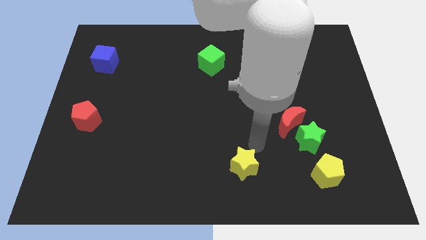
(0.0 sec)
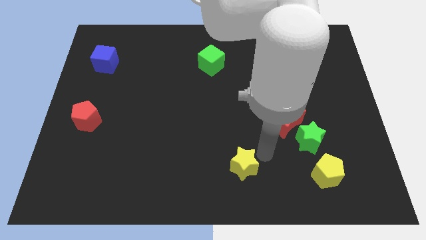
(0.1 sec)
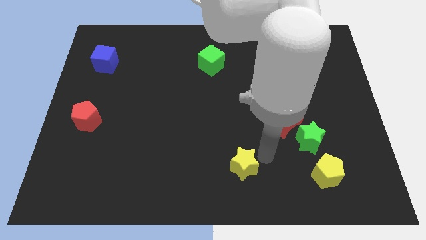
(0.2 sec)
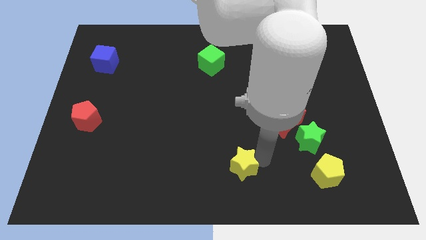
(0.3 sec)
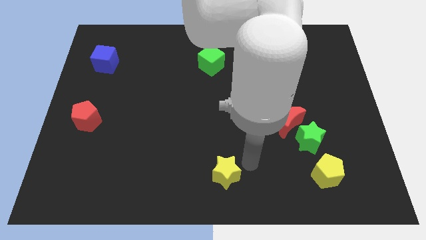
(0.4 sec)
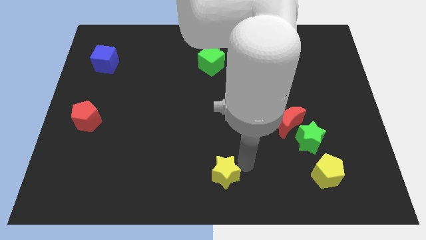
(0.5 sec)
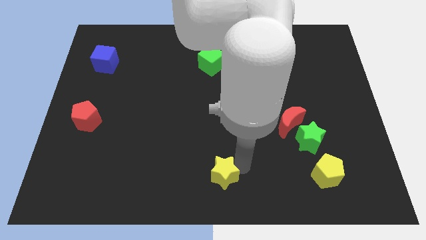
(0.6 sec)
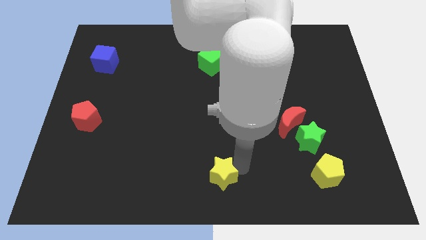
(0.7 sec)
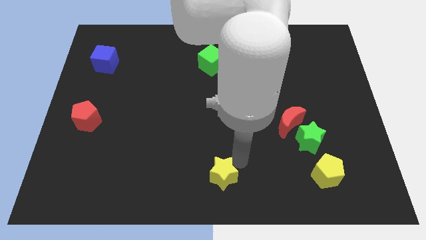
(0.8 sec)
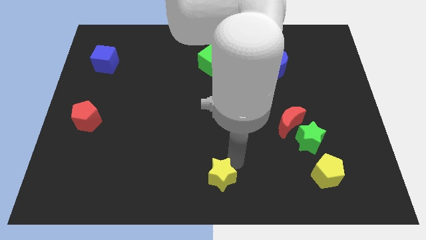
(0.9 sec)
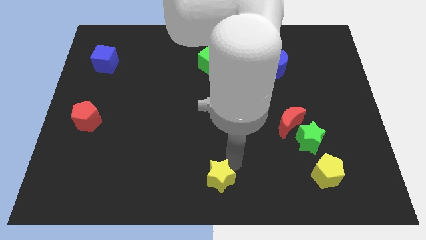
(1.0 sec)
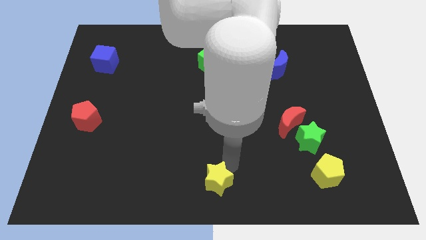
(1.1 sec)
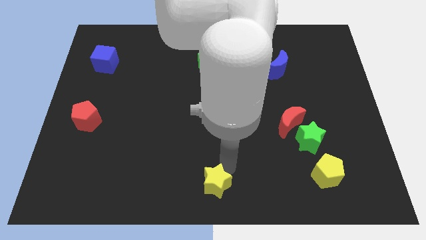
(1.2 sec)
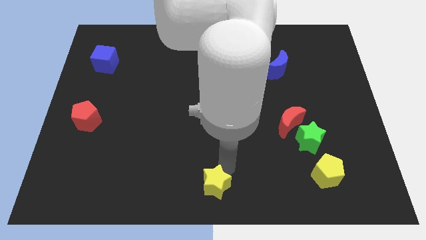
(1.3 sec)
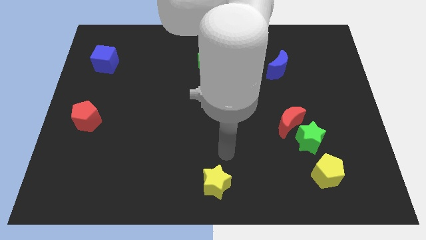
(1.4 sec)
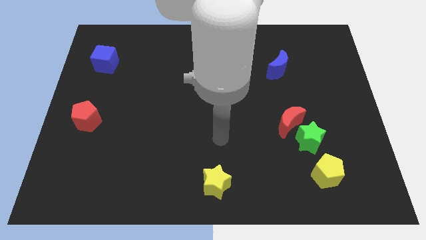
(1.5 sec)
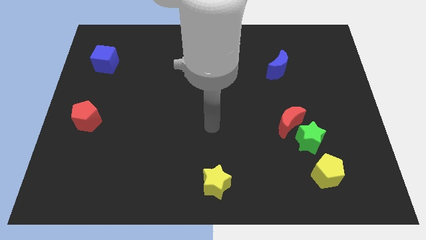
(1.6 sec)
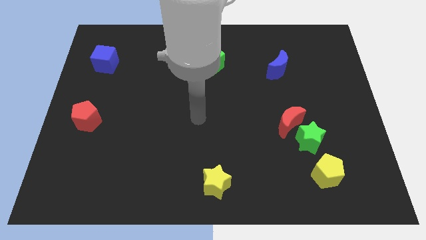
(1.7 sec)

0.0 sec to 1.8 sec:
push the yellow star slightly towards the bottom center of the board

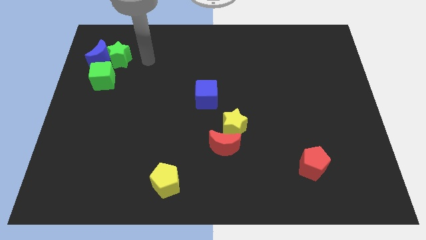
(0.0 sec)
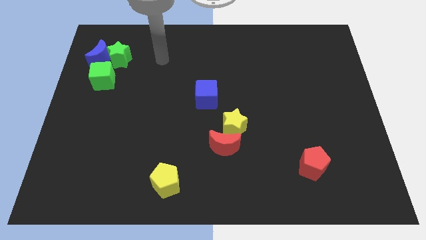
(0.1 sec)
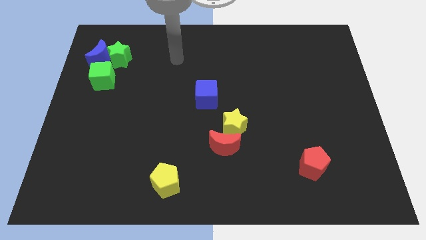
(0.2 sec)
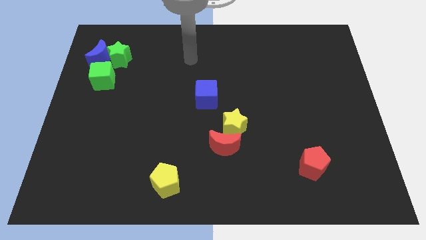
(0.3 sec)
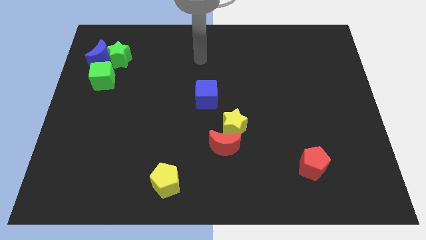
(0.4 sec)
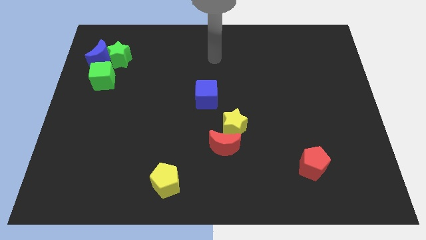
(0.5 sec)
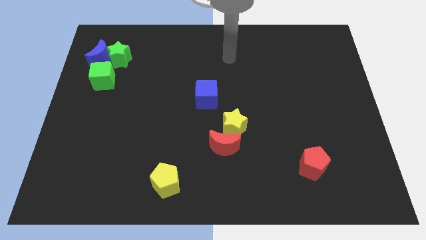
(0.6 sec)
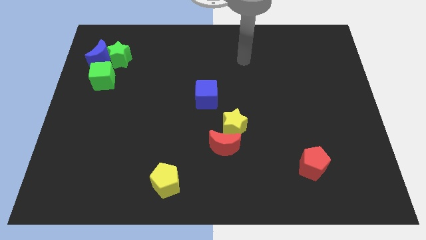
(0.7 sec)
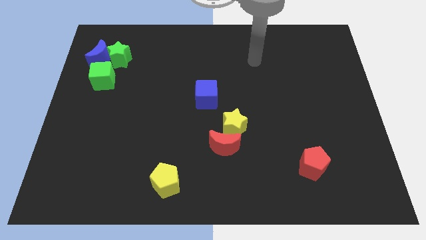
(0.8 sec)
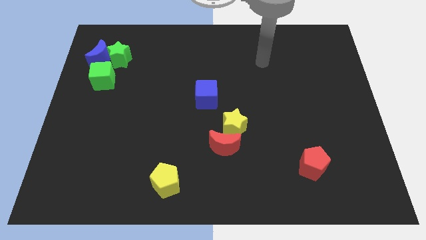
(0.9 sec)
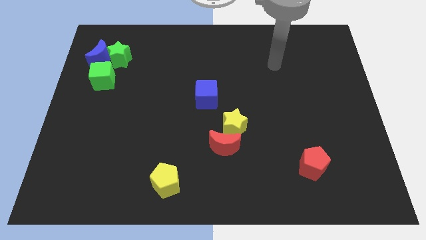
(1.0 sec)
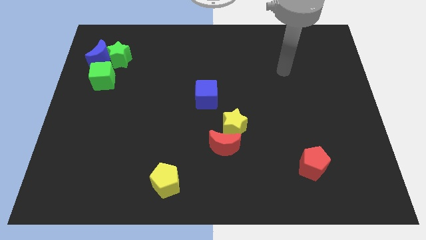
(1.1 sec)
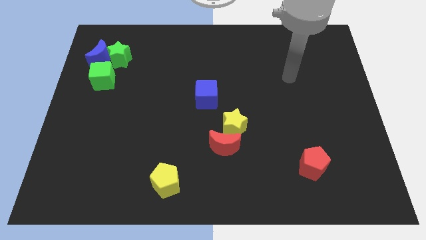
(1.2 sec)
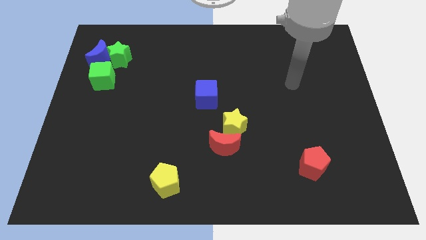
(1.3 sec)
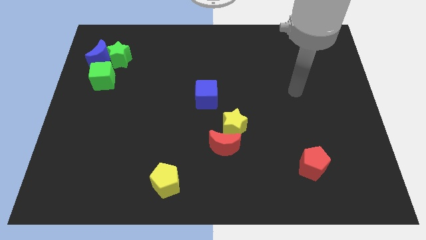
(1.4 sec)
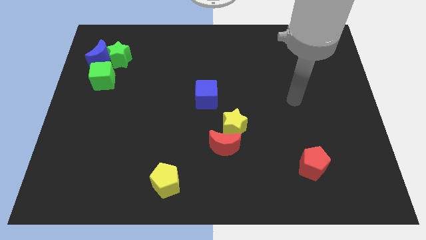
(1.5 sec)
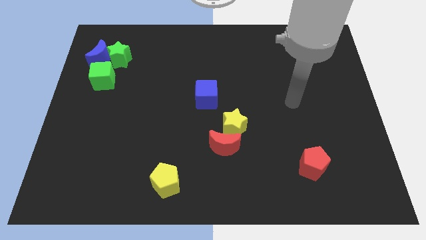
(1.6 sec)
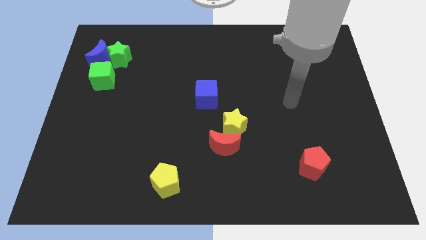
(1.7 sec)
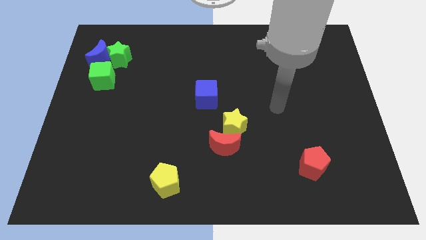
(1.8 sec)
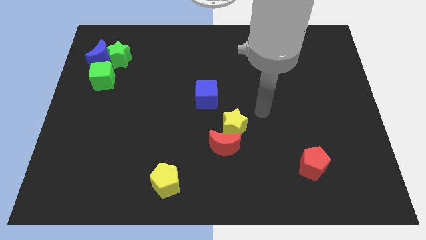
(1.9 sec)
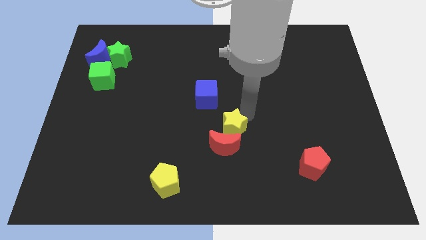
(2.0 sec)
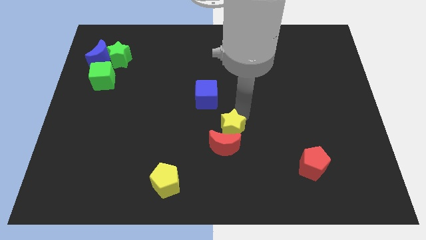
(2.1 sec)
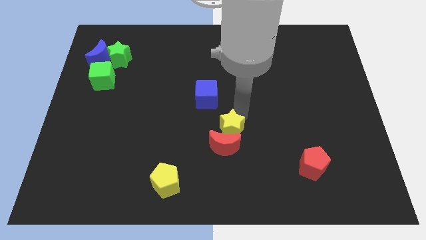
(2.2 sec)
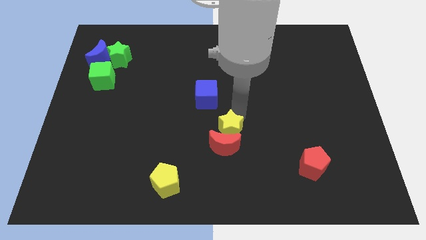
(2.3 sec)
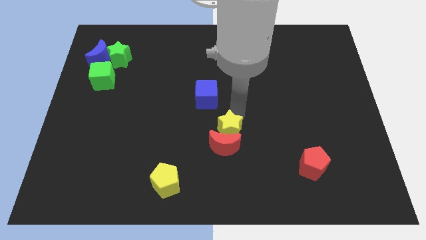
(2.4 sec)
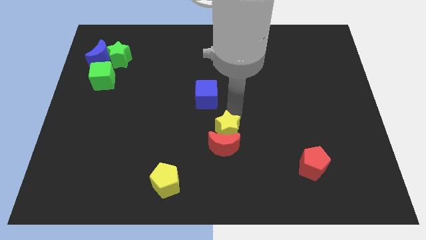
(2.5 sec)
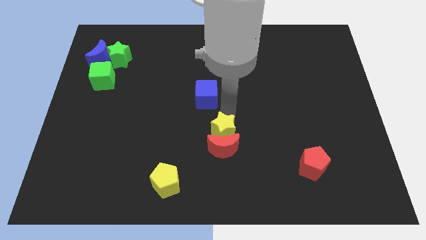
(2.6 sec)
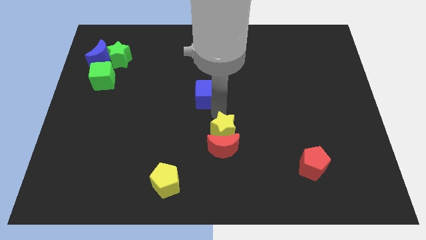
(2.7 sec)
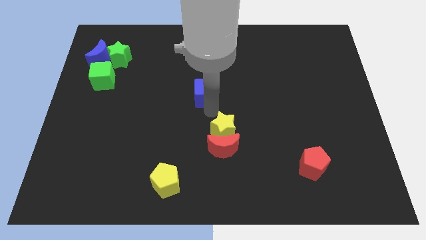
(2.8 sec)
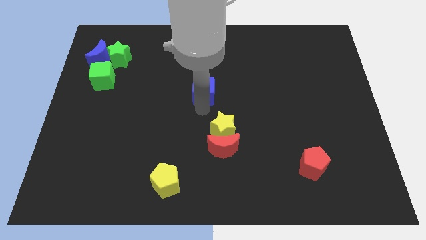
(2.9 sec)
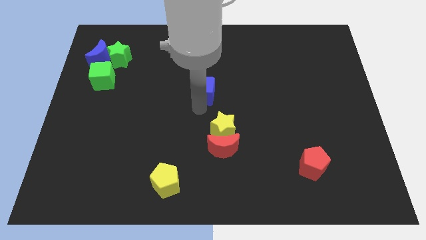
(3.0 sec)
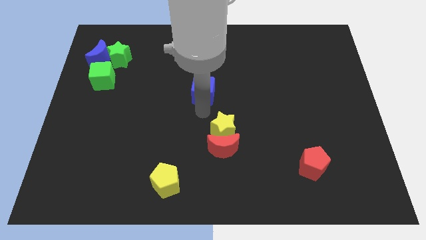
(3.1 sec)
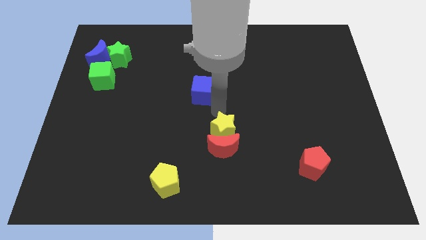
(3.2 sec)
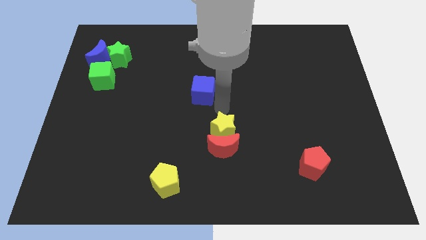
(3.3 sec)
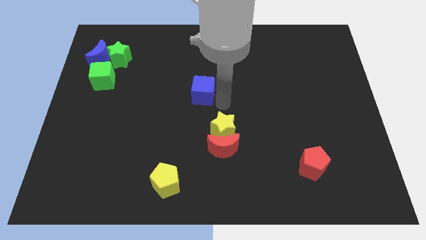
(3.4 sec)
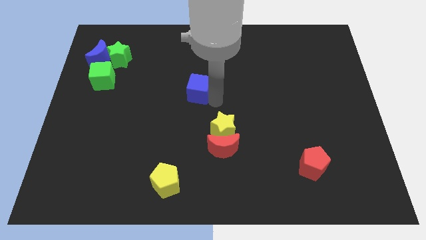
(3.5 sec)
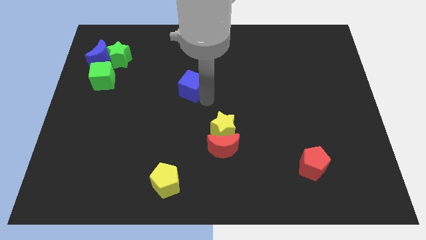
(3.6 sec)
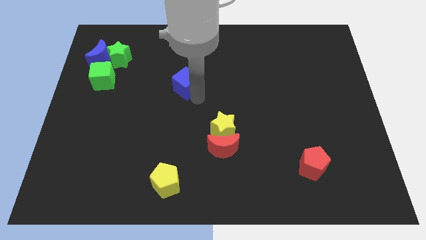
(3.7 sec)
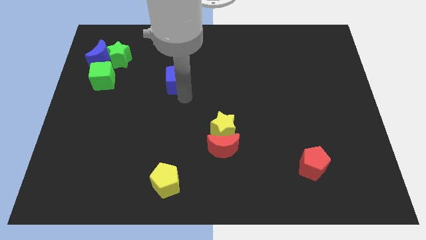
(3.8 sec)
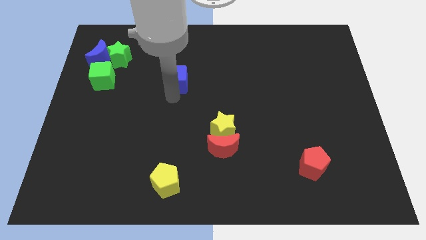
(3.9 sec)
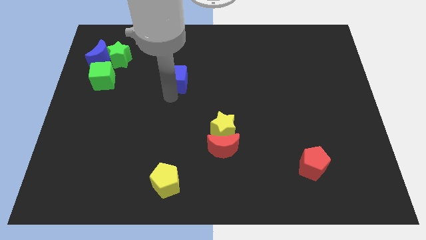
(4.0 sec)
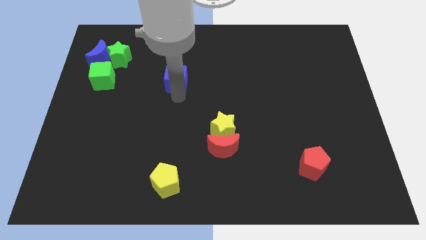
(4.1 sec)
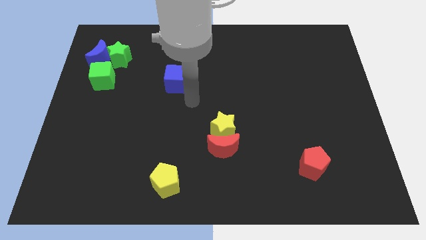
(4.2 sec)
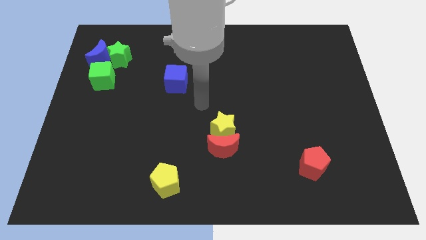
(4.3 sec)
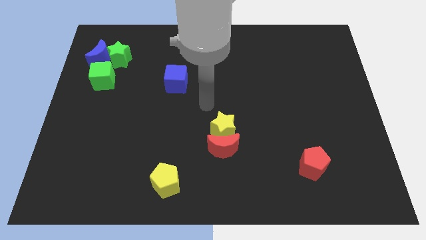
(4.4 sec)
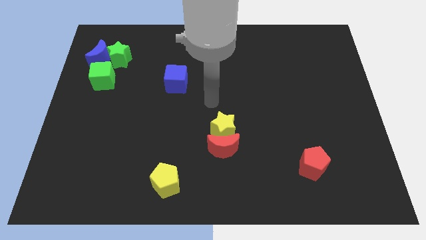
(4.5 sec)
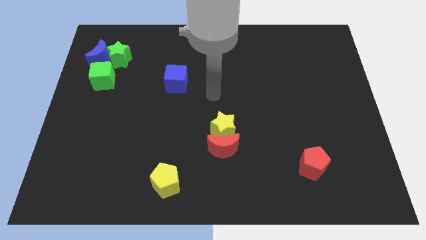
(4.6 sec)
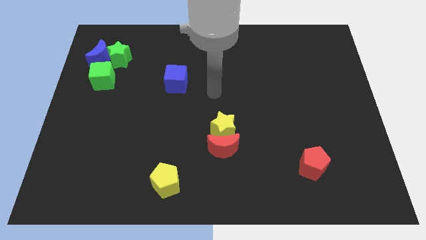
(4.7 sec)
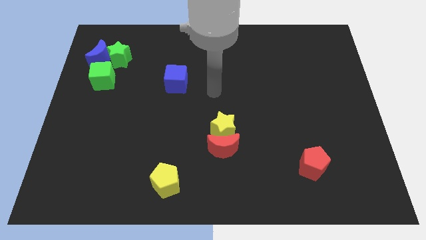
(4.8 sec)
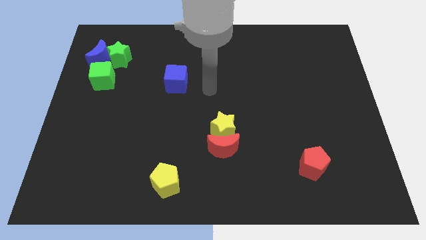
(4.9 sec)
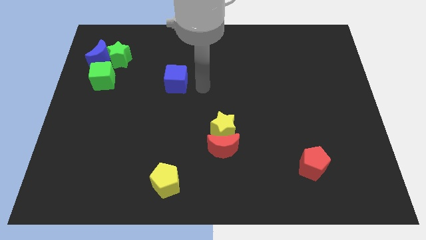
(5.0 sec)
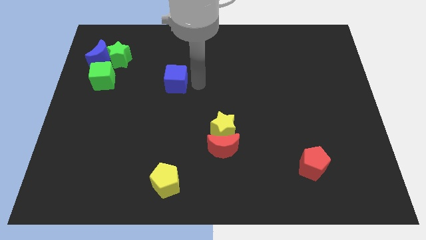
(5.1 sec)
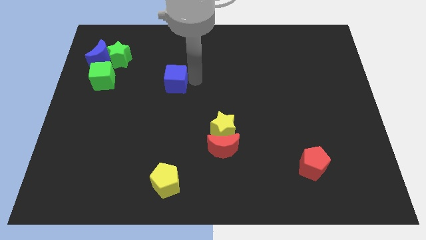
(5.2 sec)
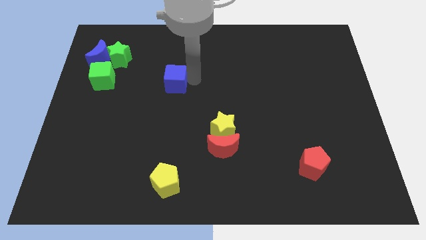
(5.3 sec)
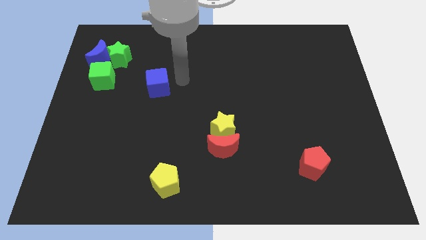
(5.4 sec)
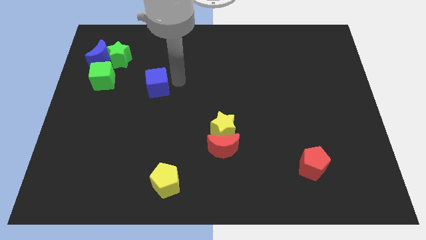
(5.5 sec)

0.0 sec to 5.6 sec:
push the blue cube towards the right side of the green cube

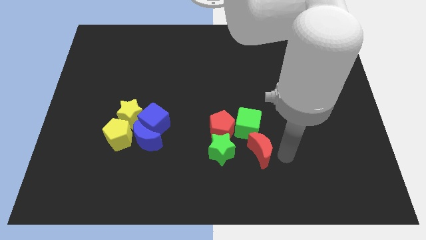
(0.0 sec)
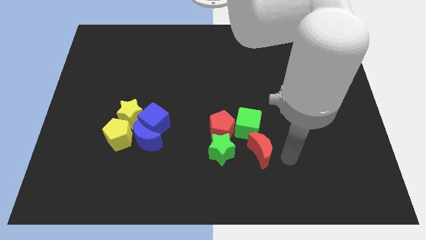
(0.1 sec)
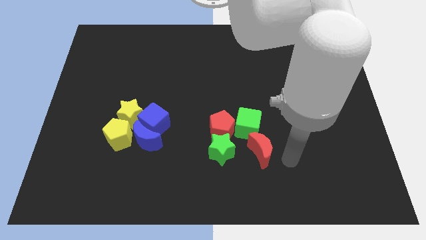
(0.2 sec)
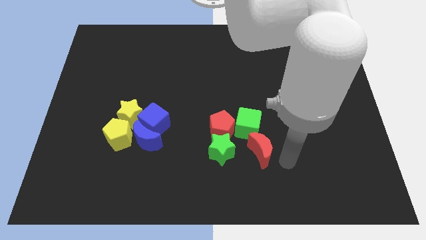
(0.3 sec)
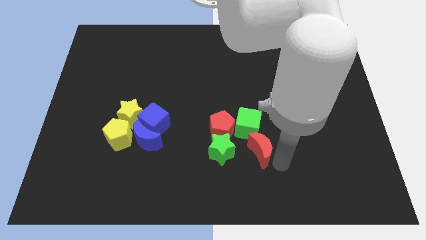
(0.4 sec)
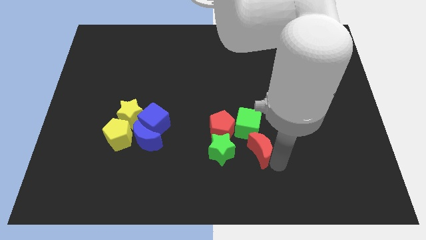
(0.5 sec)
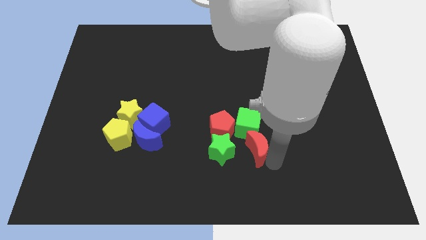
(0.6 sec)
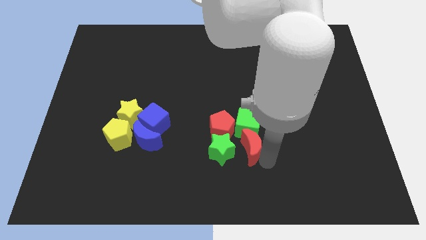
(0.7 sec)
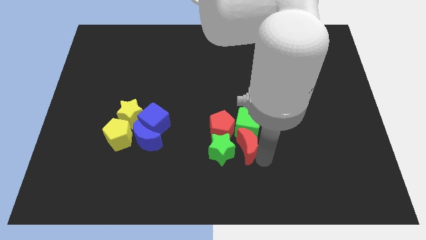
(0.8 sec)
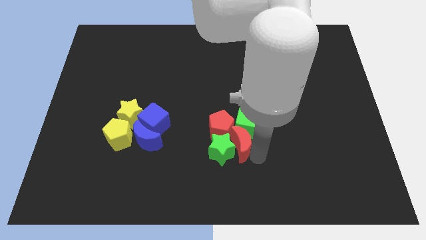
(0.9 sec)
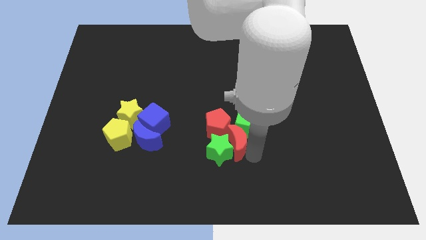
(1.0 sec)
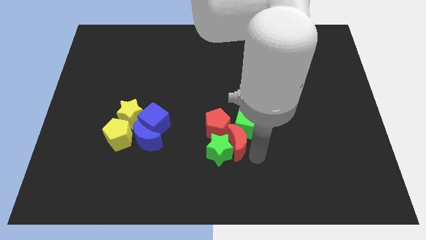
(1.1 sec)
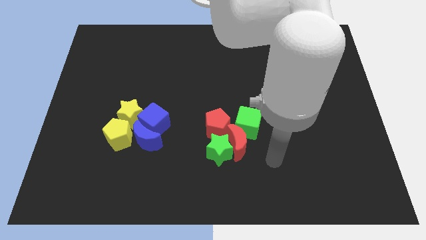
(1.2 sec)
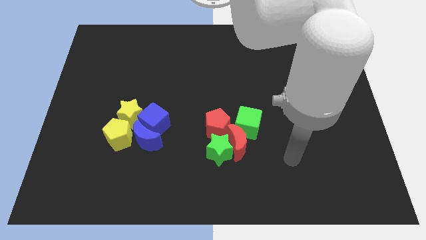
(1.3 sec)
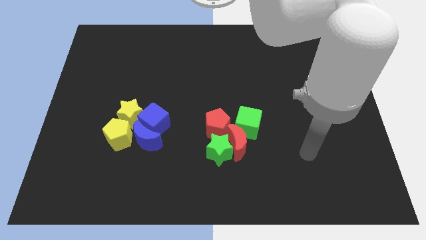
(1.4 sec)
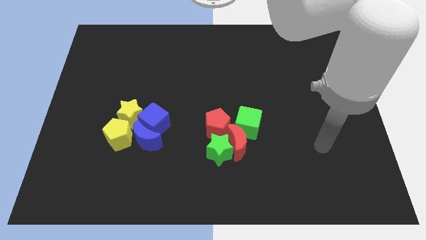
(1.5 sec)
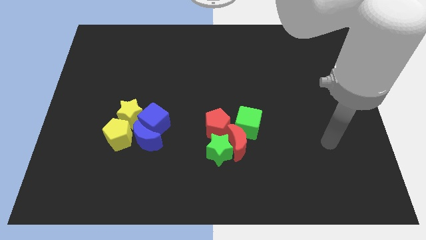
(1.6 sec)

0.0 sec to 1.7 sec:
move red moon between green cube and green star
